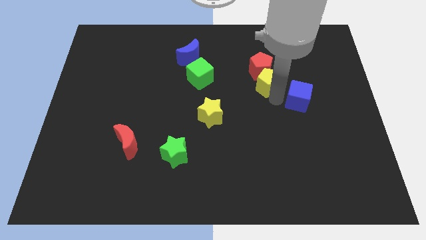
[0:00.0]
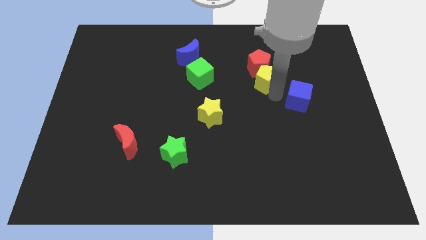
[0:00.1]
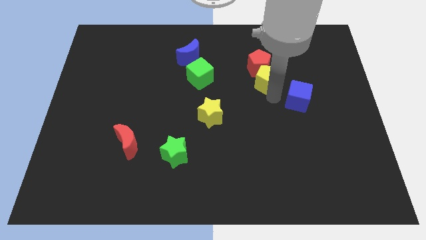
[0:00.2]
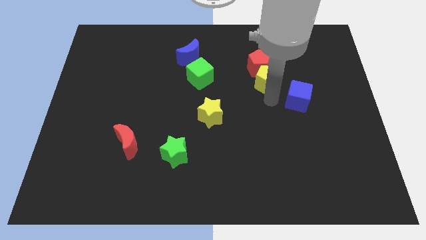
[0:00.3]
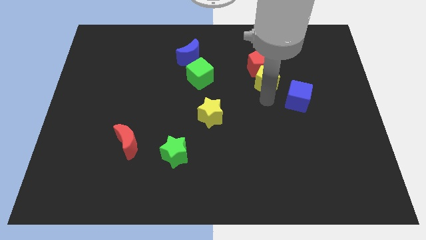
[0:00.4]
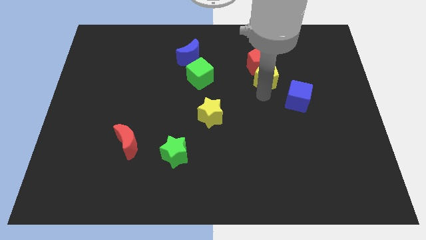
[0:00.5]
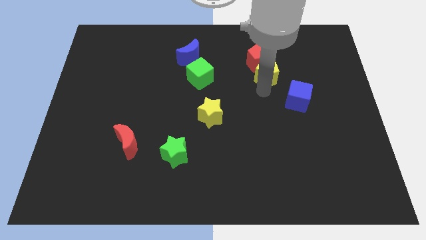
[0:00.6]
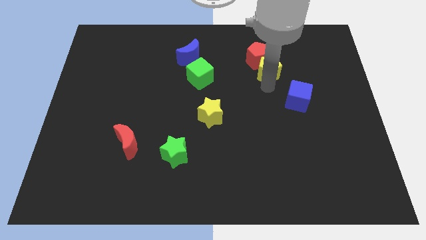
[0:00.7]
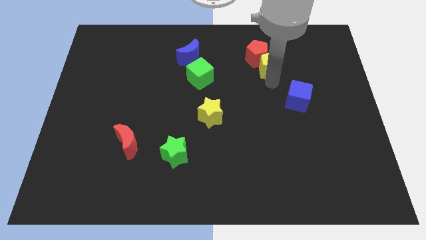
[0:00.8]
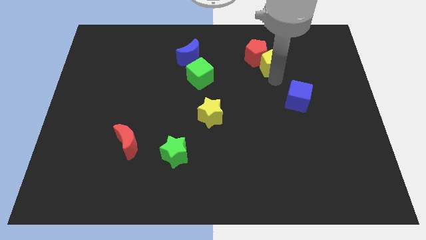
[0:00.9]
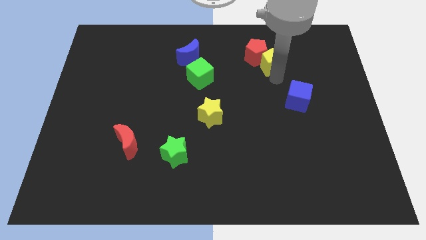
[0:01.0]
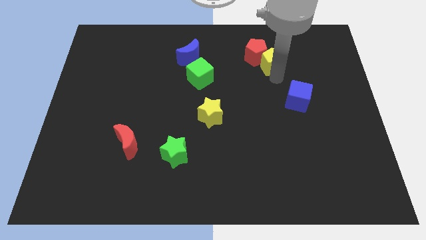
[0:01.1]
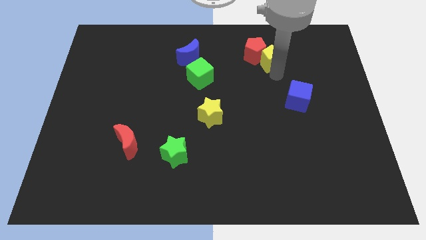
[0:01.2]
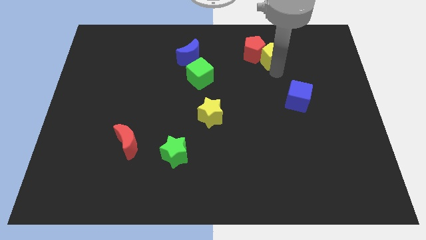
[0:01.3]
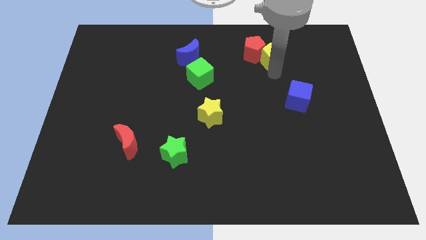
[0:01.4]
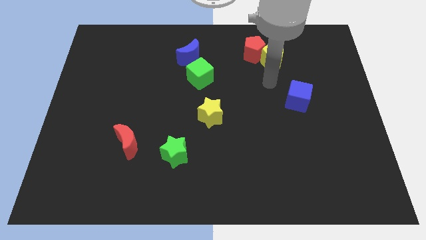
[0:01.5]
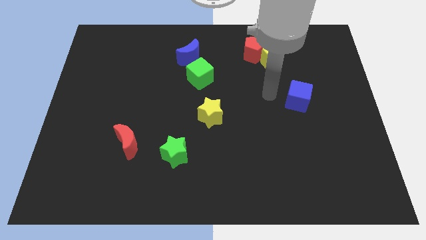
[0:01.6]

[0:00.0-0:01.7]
push the yellow pentagon and red pentagon slightly up

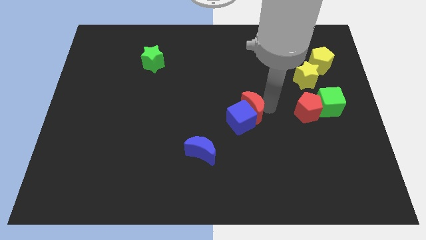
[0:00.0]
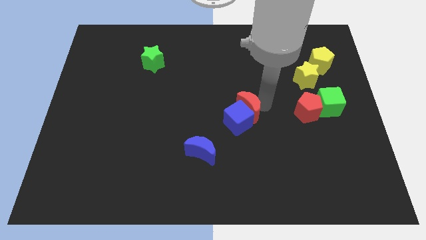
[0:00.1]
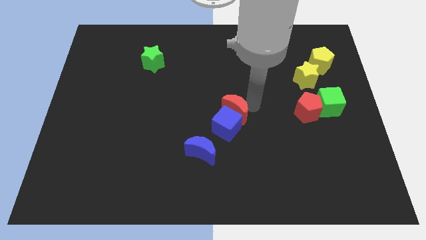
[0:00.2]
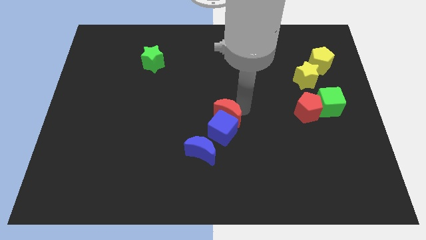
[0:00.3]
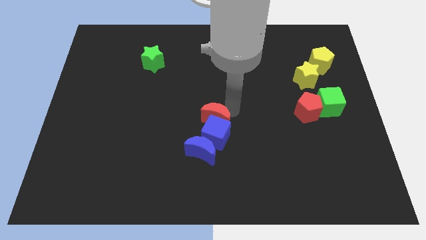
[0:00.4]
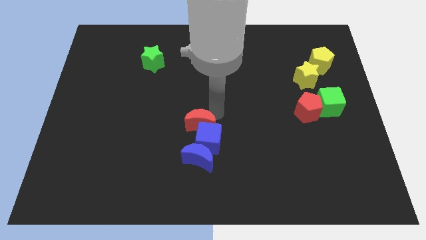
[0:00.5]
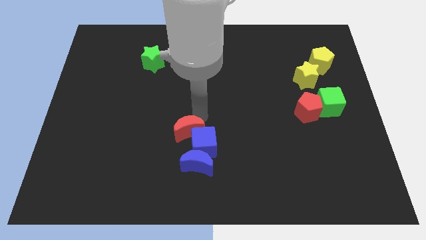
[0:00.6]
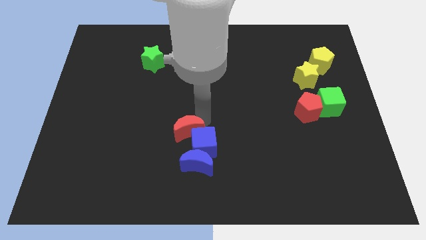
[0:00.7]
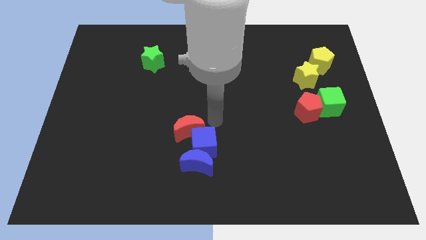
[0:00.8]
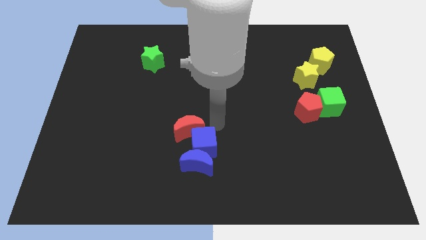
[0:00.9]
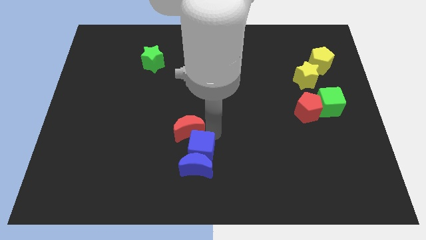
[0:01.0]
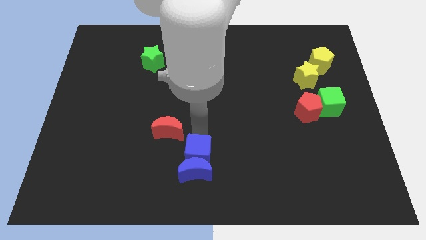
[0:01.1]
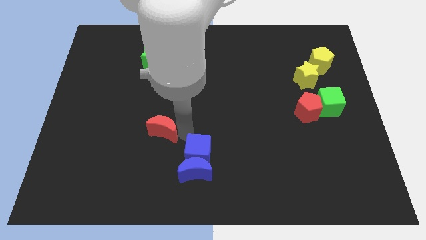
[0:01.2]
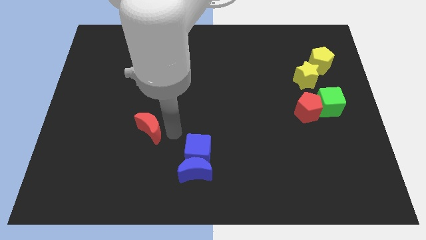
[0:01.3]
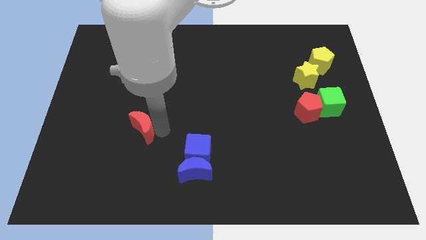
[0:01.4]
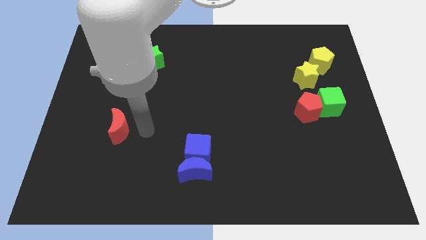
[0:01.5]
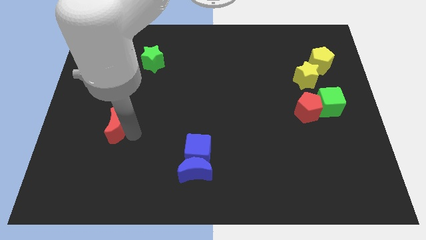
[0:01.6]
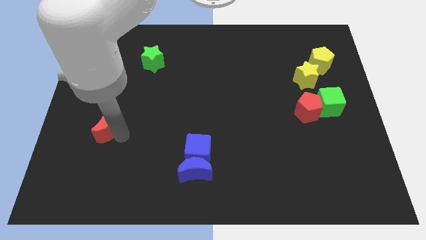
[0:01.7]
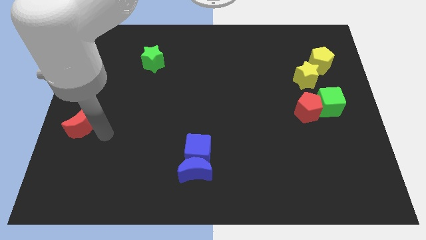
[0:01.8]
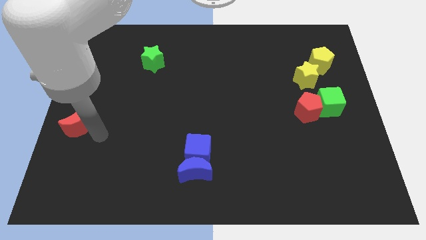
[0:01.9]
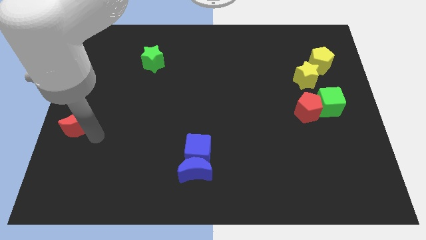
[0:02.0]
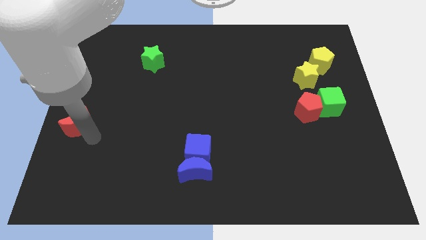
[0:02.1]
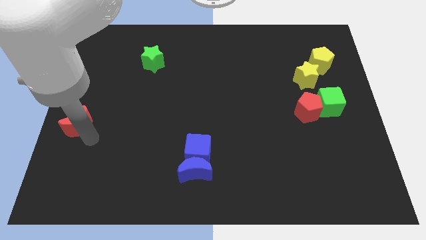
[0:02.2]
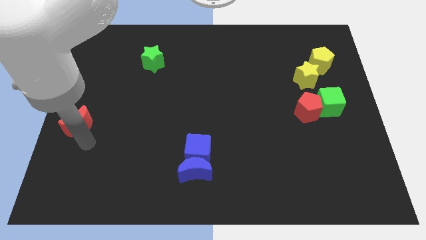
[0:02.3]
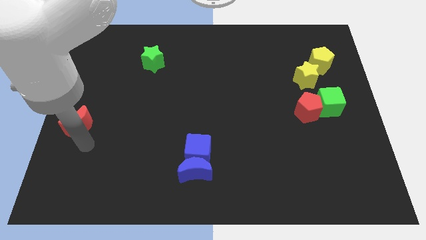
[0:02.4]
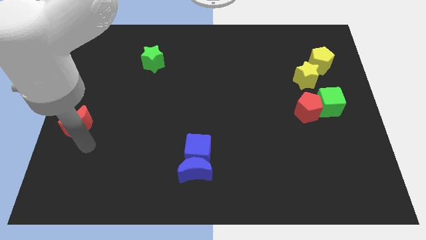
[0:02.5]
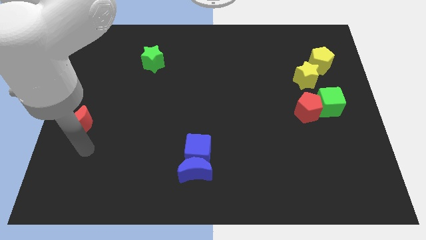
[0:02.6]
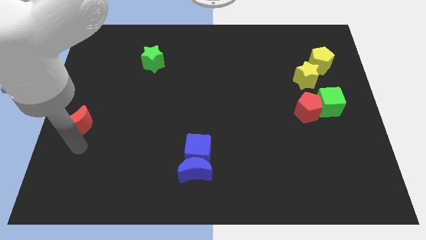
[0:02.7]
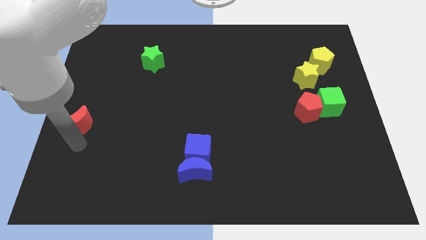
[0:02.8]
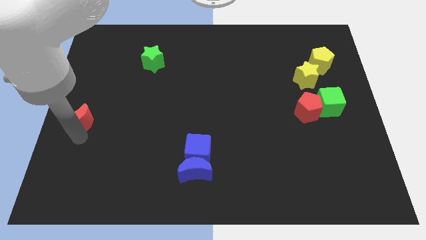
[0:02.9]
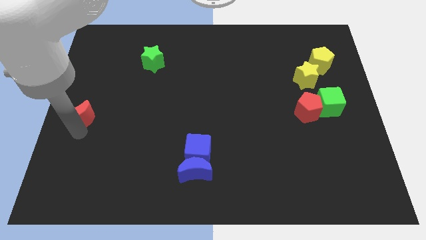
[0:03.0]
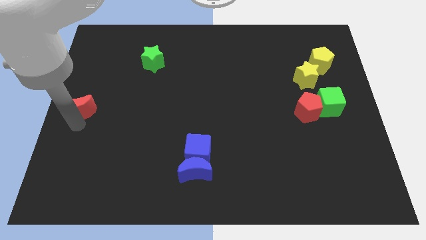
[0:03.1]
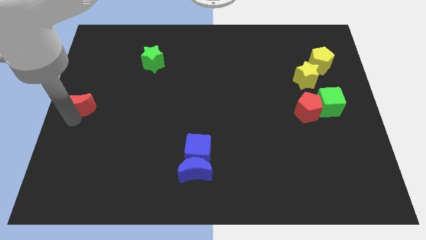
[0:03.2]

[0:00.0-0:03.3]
place red moon to the left center of the board

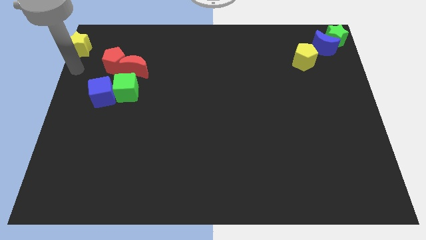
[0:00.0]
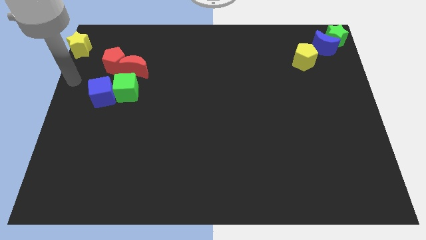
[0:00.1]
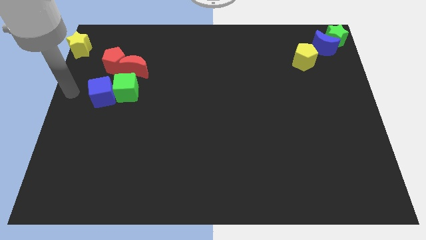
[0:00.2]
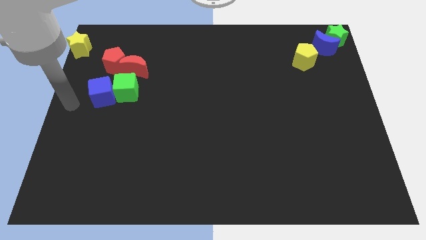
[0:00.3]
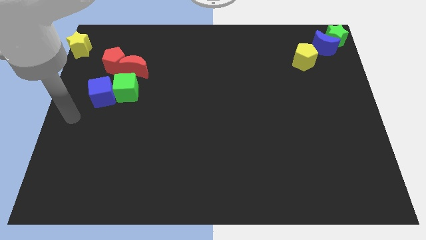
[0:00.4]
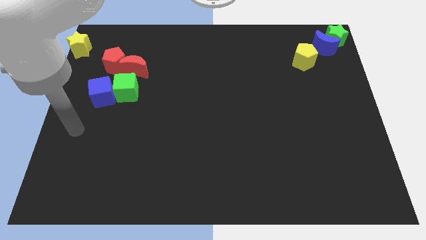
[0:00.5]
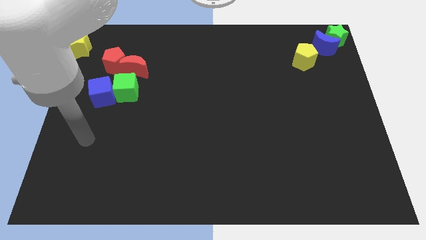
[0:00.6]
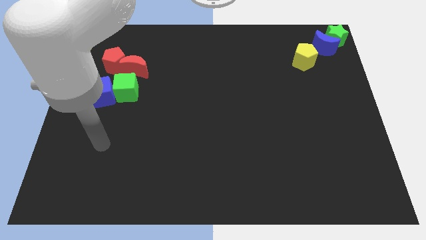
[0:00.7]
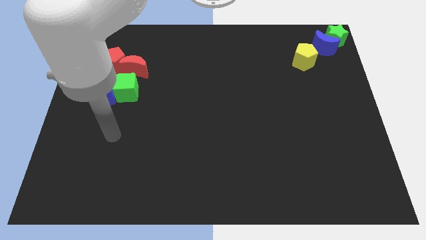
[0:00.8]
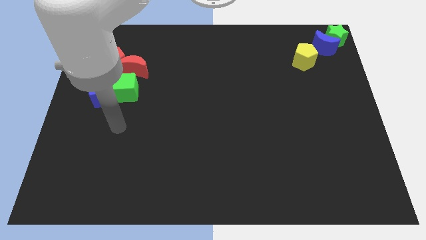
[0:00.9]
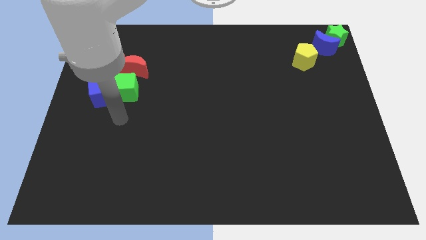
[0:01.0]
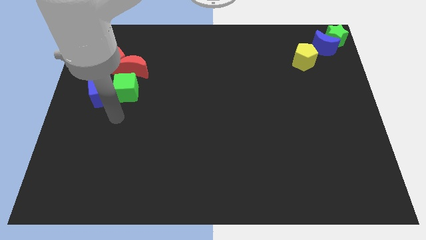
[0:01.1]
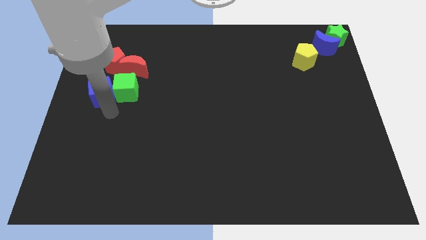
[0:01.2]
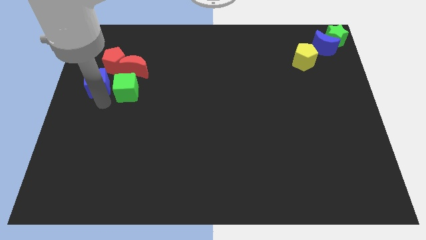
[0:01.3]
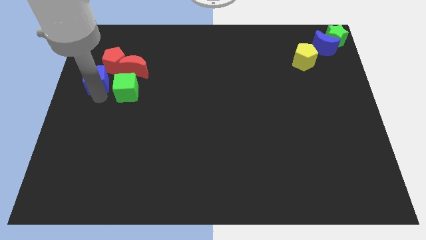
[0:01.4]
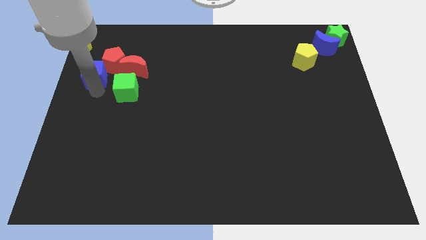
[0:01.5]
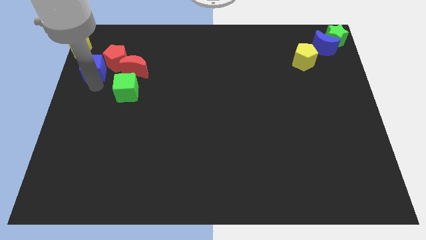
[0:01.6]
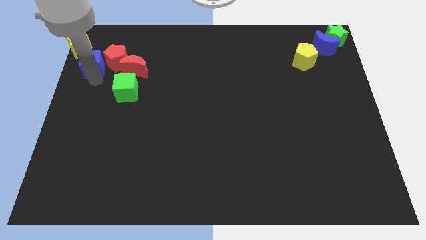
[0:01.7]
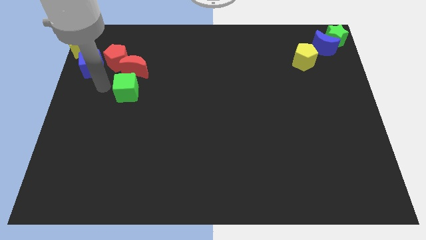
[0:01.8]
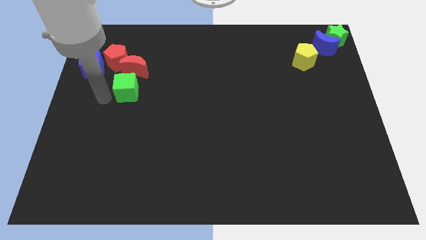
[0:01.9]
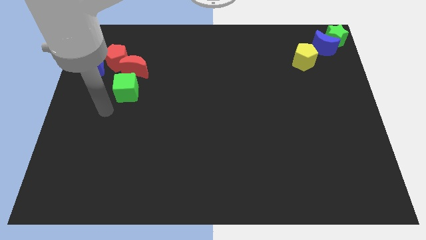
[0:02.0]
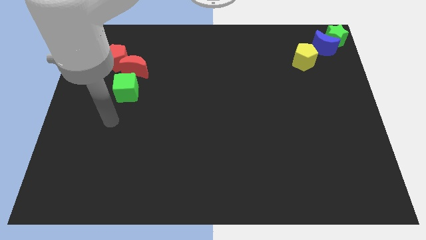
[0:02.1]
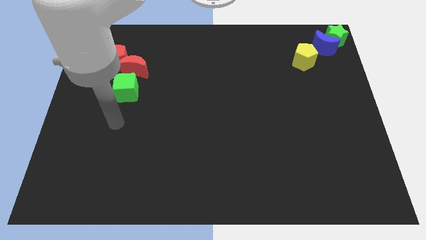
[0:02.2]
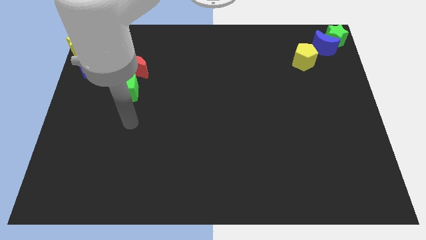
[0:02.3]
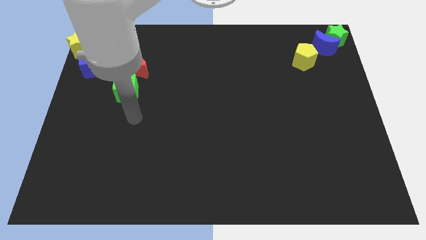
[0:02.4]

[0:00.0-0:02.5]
move the blue cube close to the yellow star

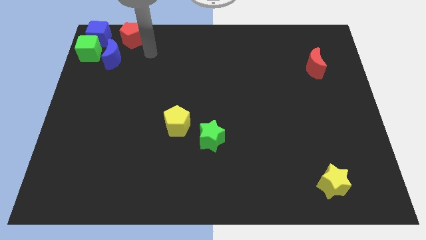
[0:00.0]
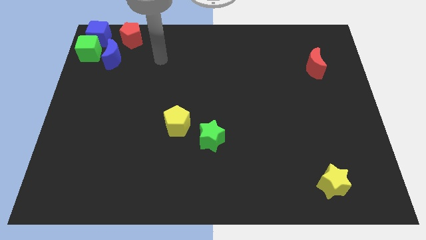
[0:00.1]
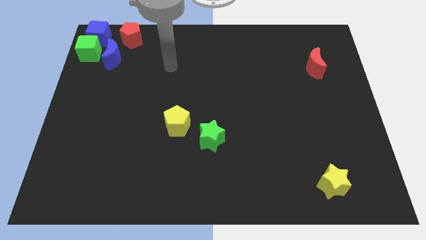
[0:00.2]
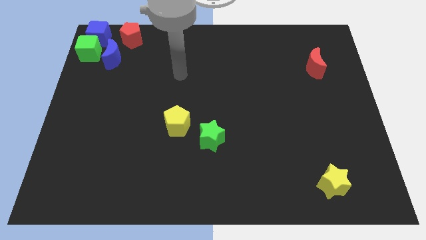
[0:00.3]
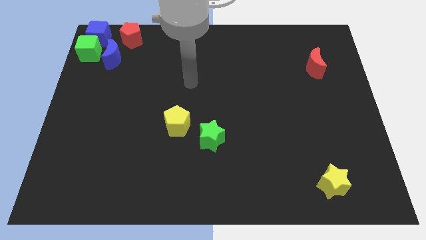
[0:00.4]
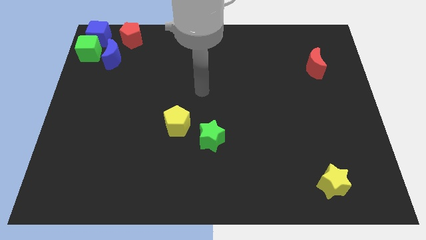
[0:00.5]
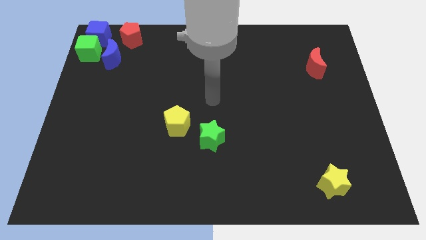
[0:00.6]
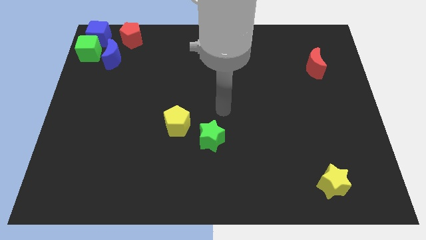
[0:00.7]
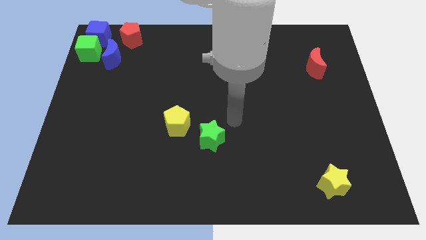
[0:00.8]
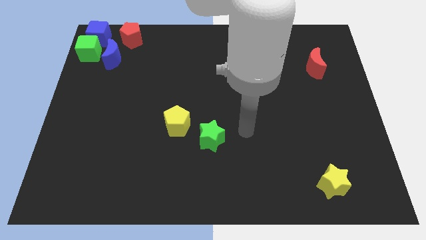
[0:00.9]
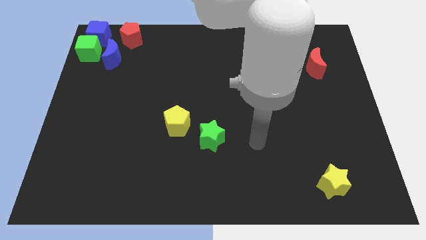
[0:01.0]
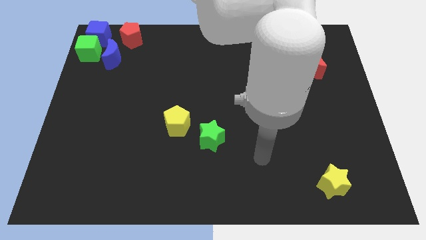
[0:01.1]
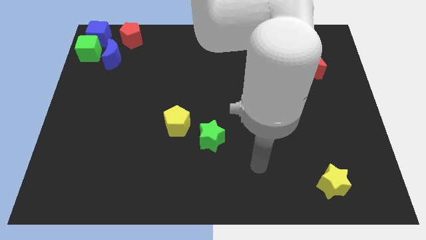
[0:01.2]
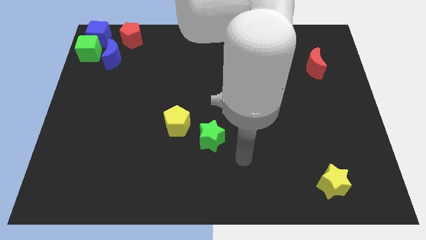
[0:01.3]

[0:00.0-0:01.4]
move the arm away from the red pentagon
